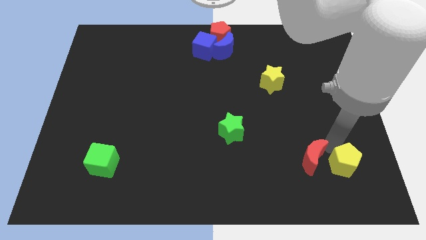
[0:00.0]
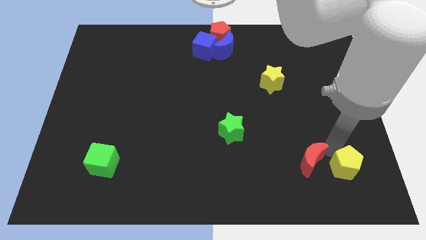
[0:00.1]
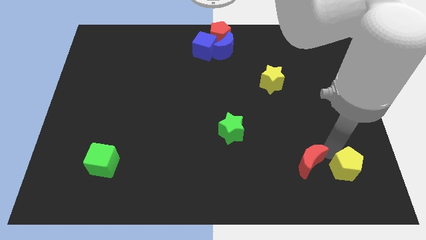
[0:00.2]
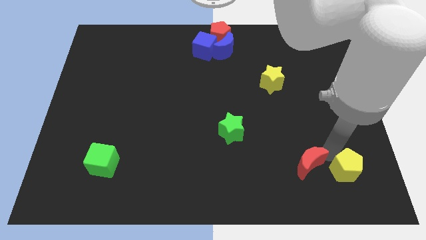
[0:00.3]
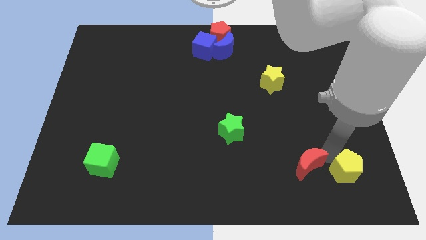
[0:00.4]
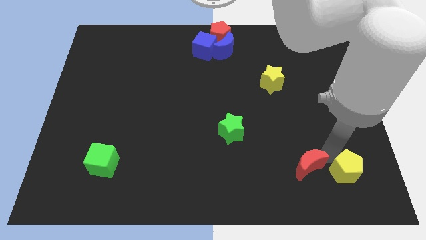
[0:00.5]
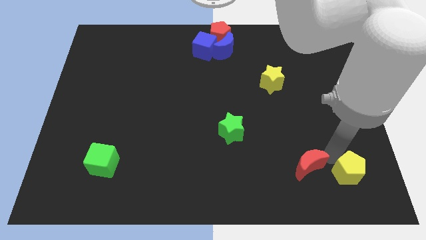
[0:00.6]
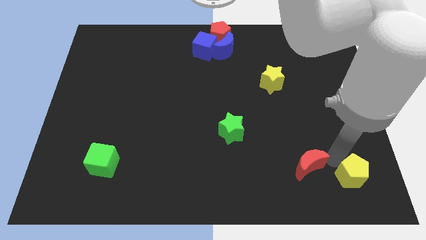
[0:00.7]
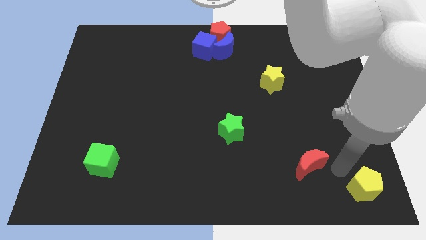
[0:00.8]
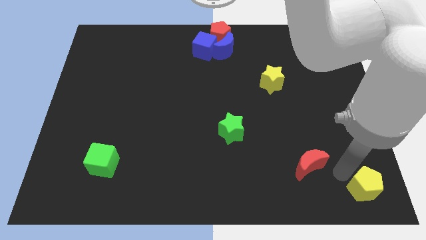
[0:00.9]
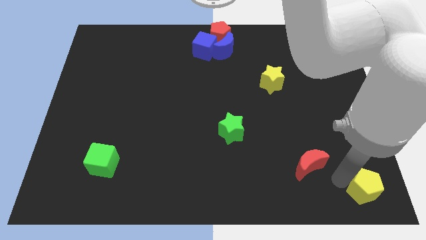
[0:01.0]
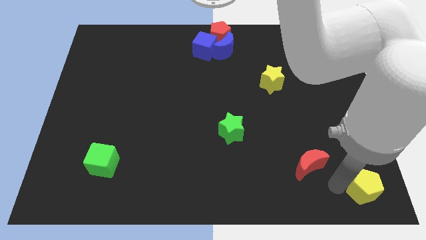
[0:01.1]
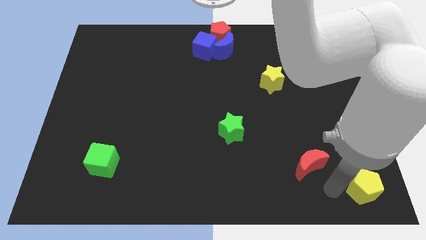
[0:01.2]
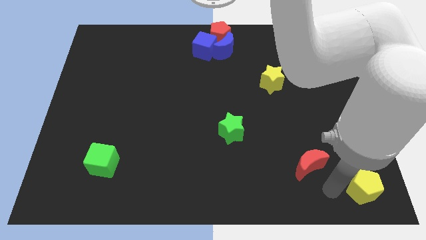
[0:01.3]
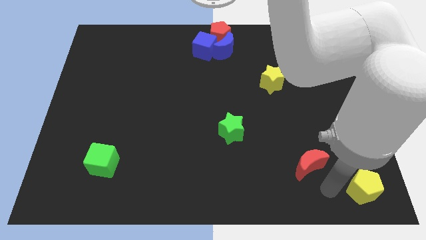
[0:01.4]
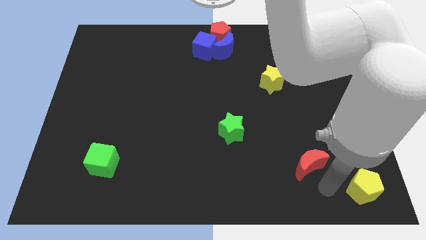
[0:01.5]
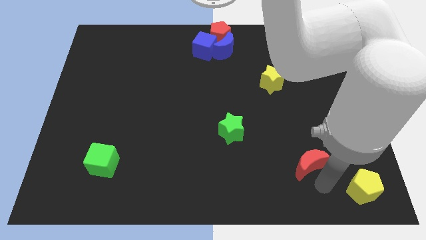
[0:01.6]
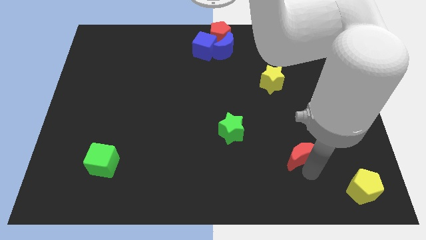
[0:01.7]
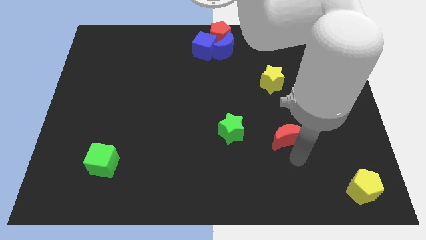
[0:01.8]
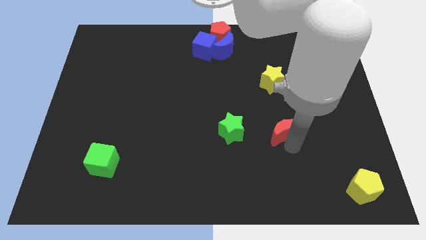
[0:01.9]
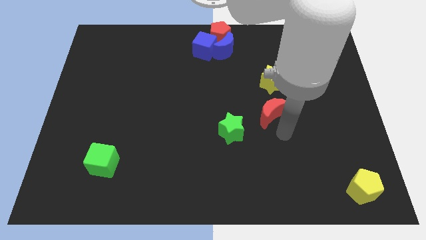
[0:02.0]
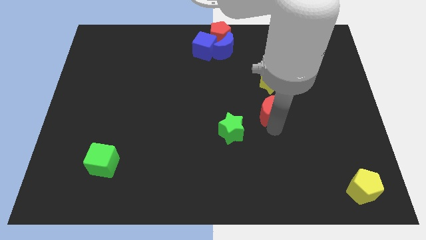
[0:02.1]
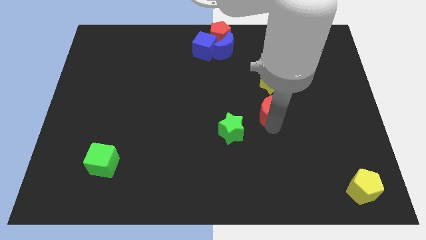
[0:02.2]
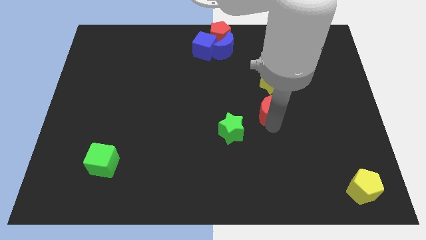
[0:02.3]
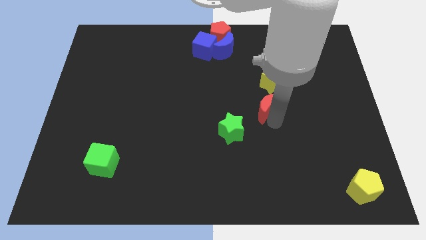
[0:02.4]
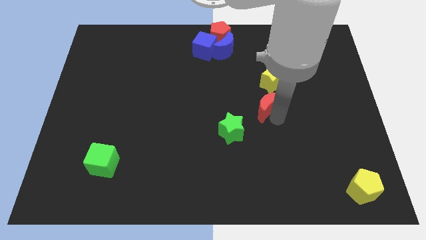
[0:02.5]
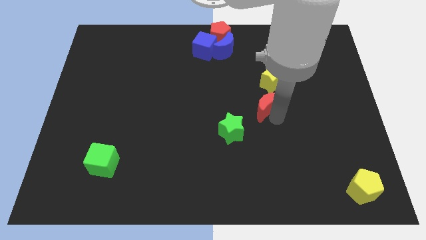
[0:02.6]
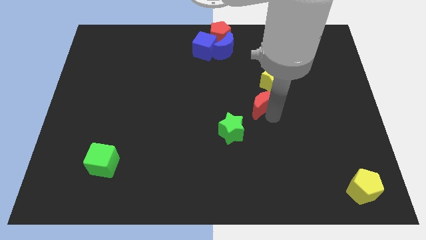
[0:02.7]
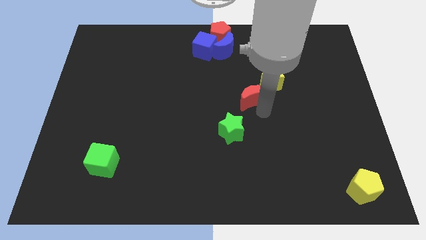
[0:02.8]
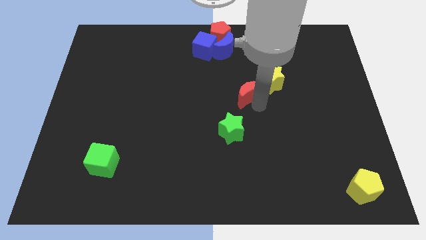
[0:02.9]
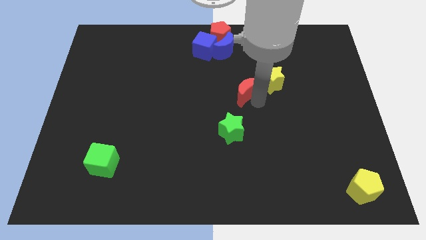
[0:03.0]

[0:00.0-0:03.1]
drag the red moon close to the yellow star

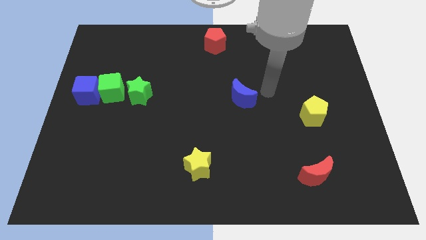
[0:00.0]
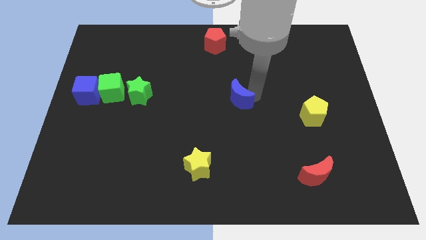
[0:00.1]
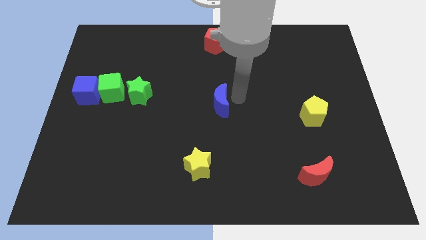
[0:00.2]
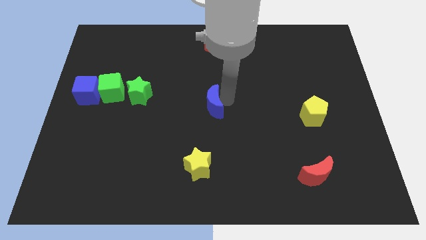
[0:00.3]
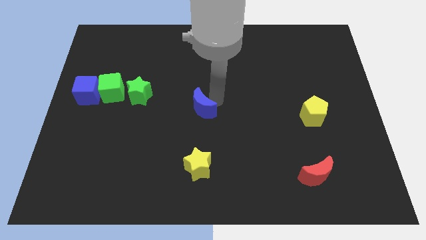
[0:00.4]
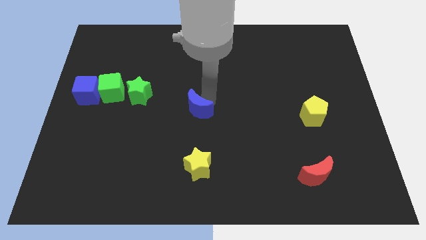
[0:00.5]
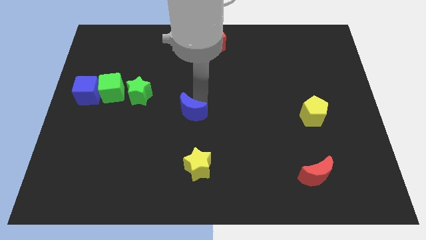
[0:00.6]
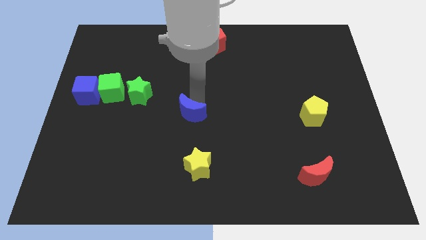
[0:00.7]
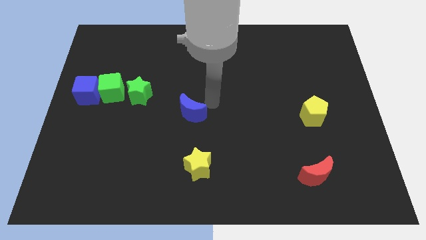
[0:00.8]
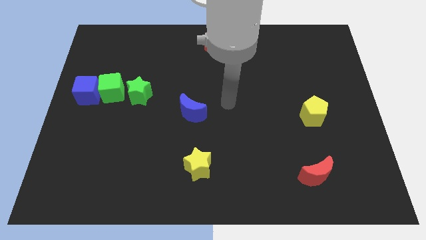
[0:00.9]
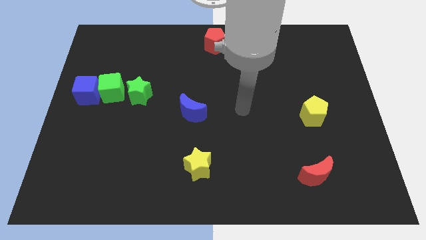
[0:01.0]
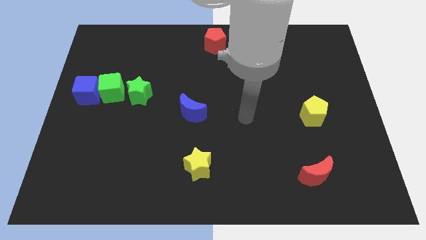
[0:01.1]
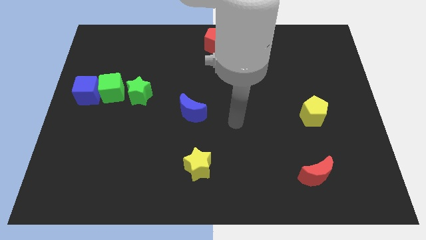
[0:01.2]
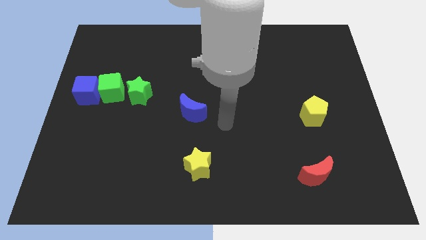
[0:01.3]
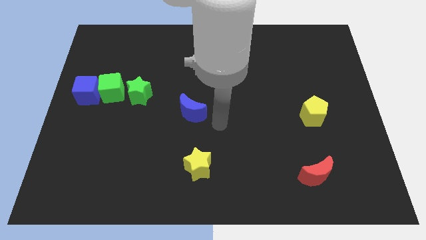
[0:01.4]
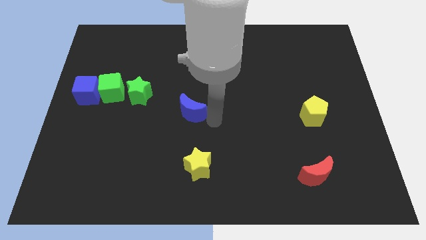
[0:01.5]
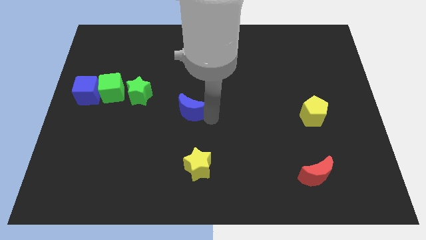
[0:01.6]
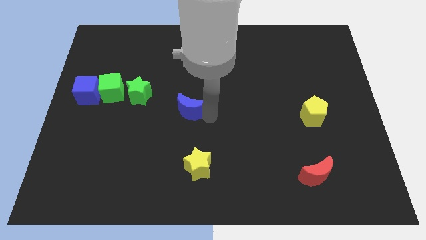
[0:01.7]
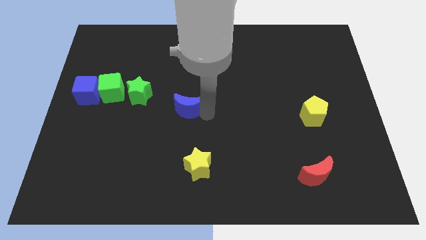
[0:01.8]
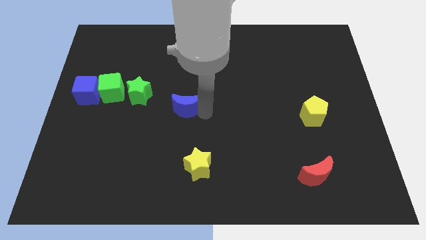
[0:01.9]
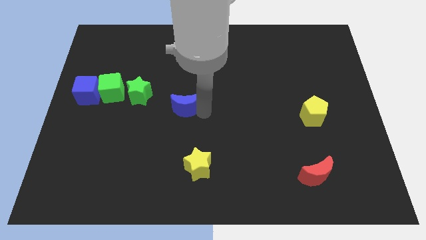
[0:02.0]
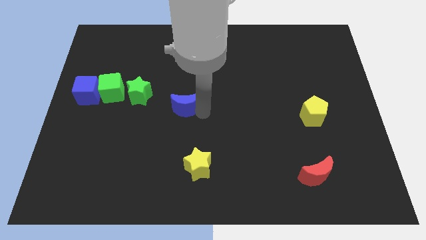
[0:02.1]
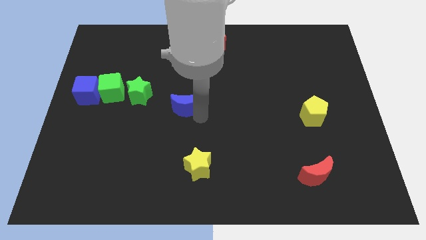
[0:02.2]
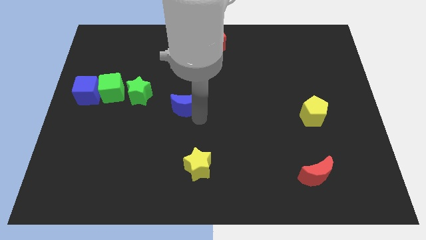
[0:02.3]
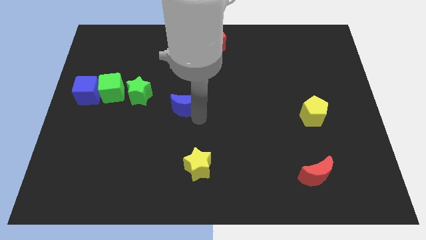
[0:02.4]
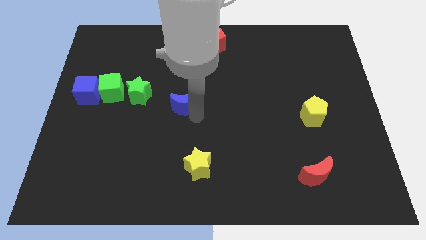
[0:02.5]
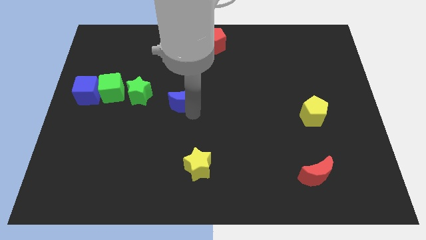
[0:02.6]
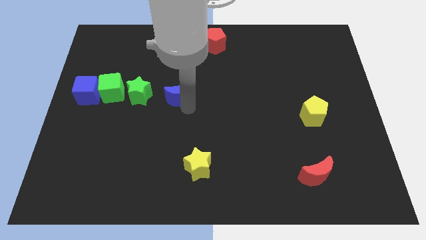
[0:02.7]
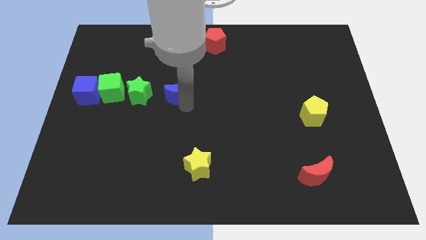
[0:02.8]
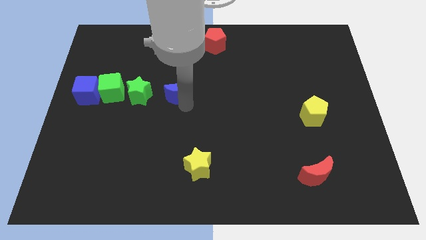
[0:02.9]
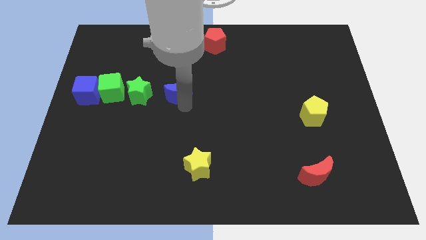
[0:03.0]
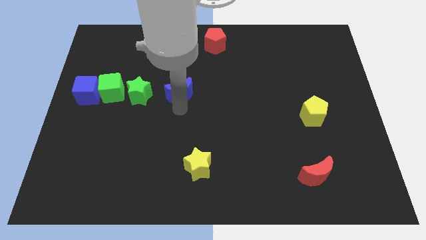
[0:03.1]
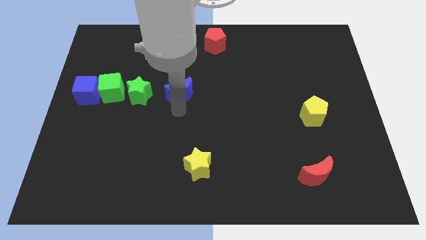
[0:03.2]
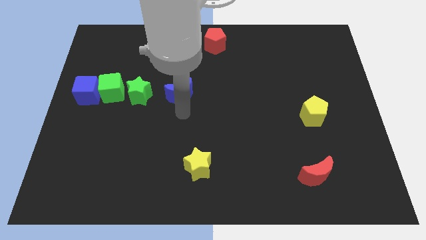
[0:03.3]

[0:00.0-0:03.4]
move blue crescent parallel right to green star

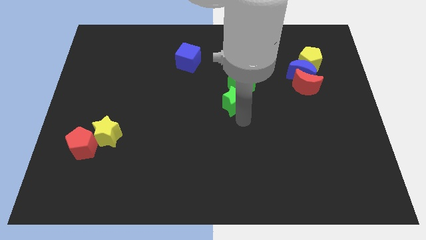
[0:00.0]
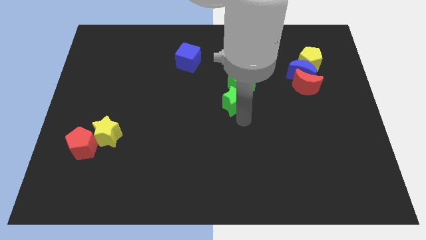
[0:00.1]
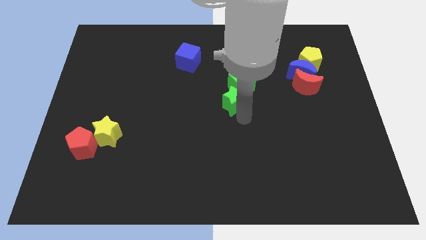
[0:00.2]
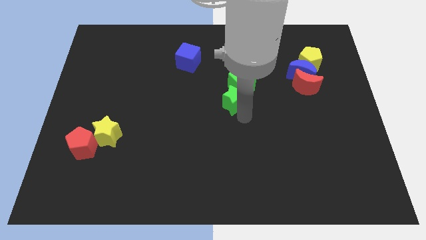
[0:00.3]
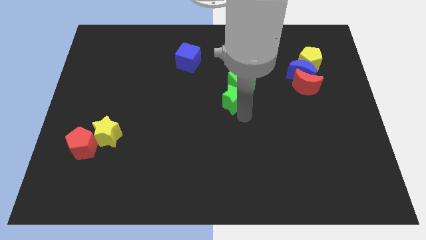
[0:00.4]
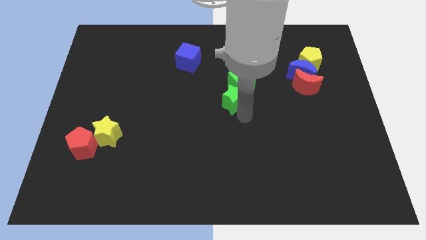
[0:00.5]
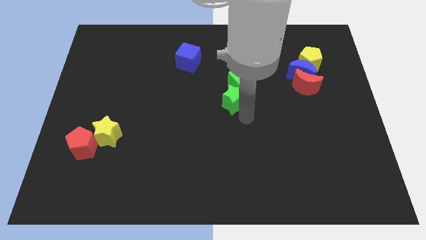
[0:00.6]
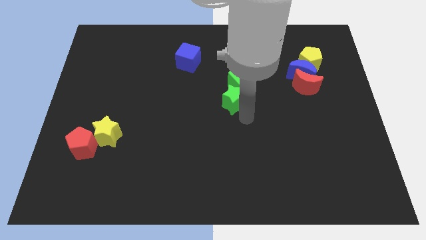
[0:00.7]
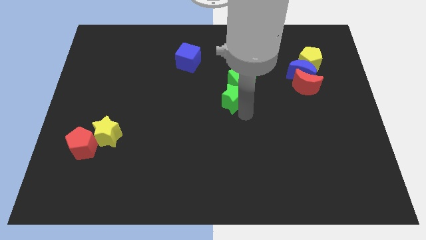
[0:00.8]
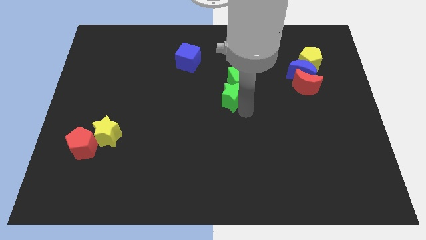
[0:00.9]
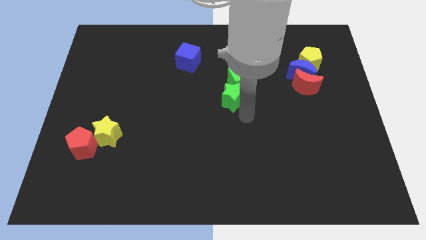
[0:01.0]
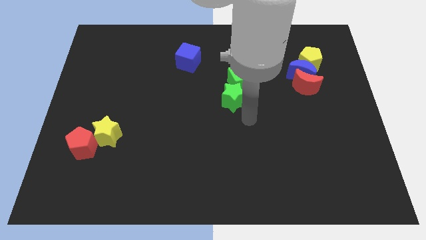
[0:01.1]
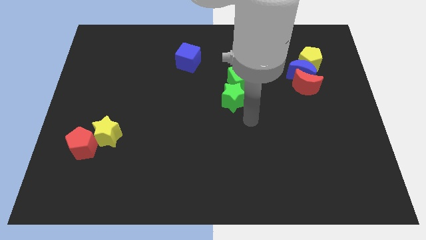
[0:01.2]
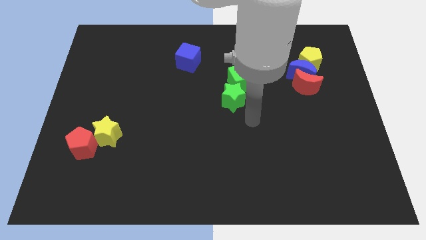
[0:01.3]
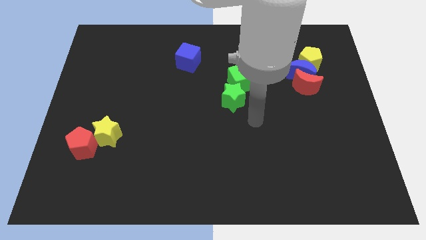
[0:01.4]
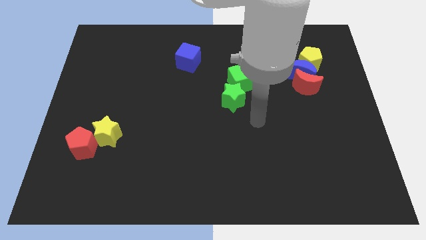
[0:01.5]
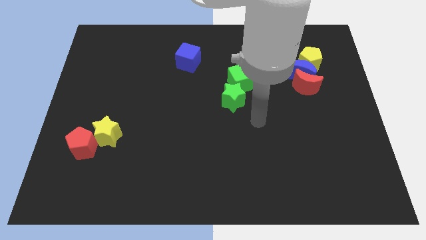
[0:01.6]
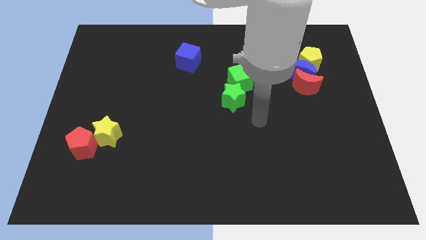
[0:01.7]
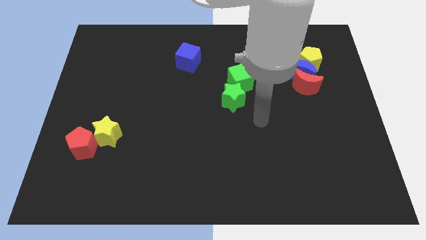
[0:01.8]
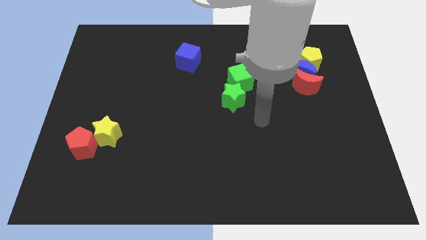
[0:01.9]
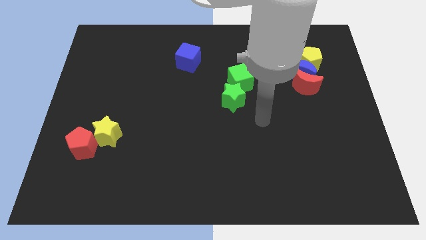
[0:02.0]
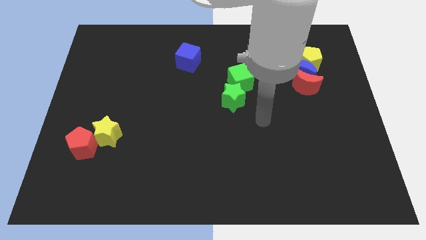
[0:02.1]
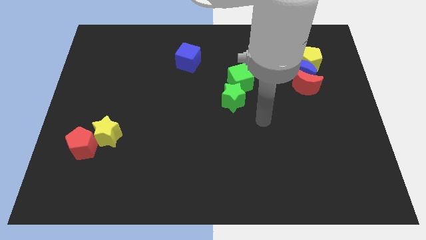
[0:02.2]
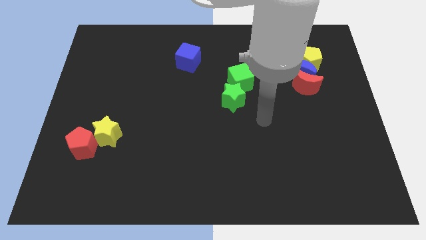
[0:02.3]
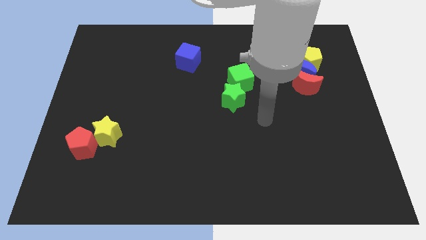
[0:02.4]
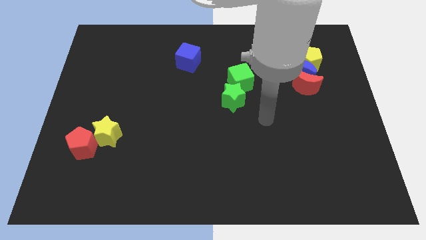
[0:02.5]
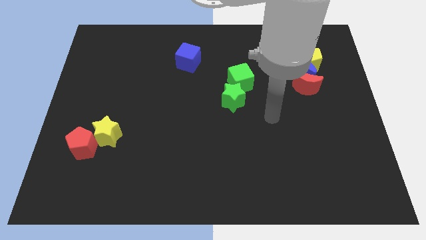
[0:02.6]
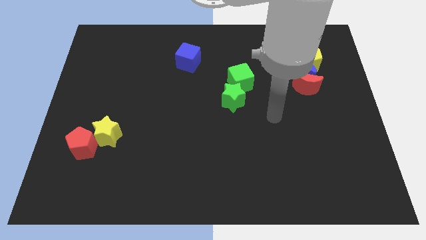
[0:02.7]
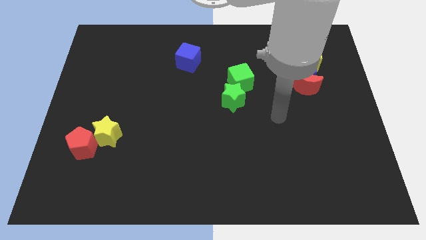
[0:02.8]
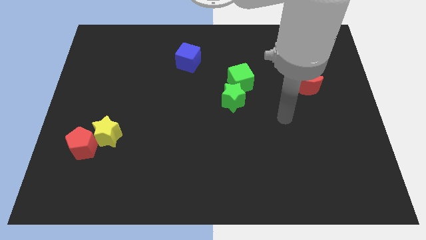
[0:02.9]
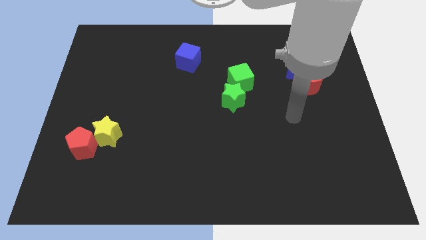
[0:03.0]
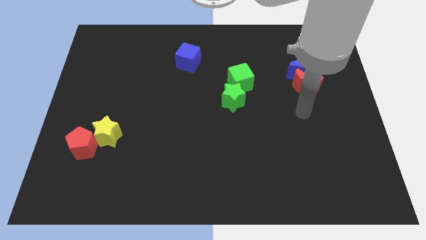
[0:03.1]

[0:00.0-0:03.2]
move green star slightly towards top side
